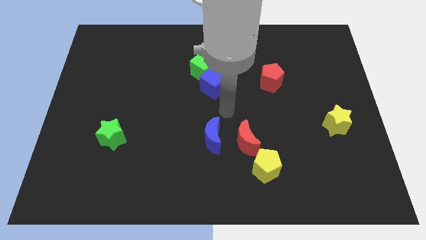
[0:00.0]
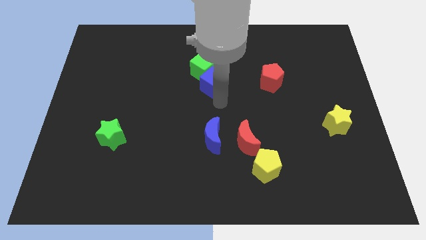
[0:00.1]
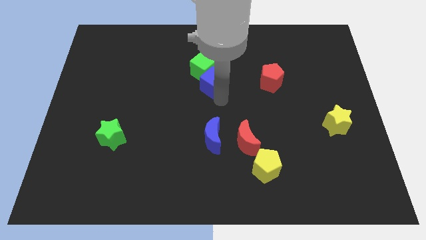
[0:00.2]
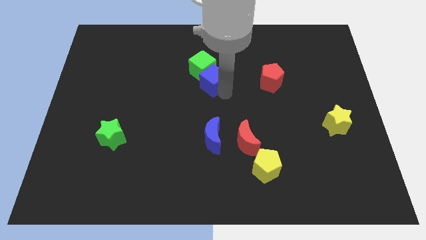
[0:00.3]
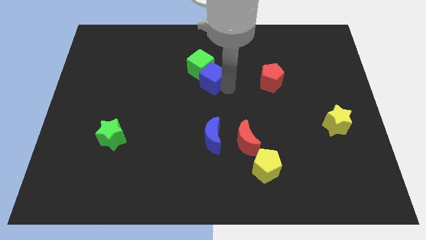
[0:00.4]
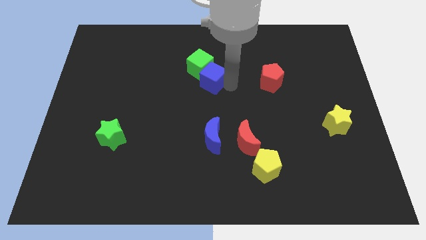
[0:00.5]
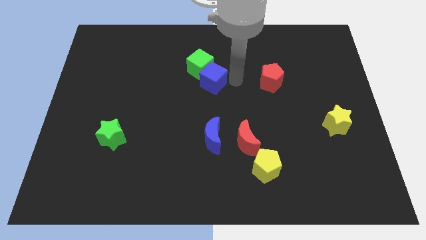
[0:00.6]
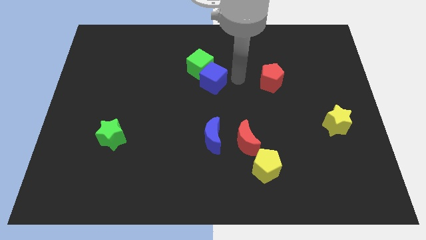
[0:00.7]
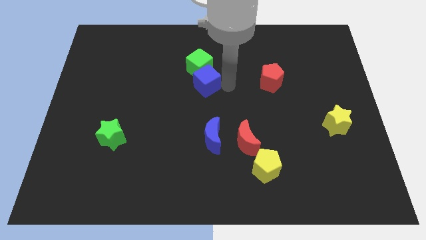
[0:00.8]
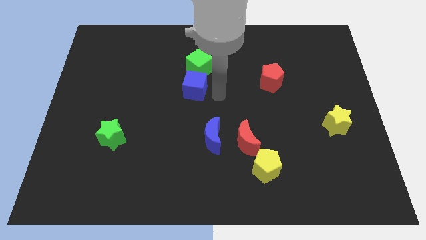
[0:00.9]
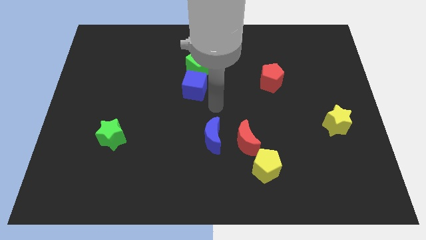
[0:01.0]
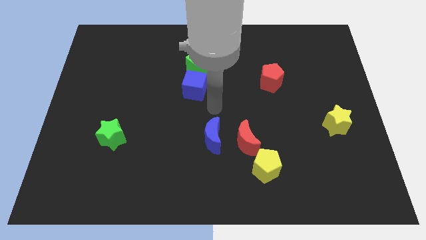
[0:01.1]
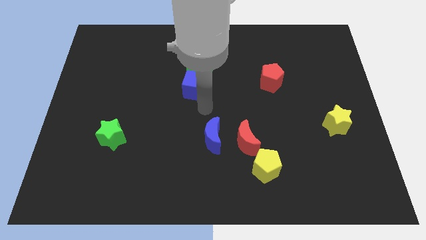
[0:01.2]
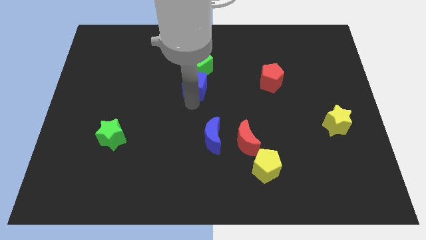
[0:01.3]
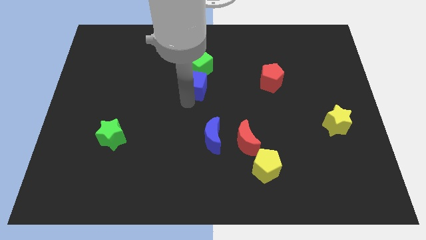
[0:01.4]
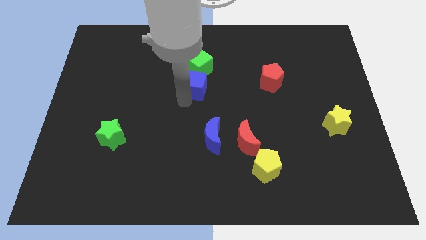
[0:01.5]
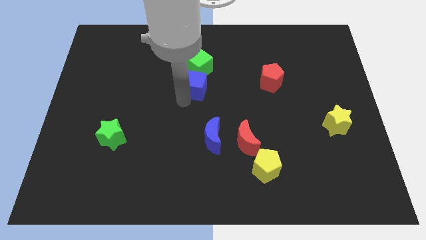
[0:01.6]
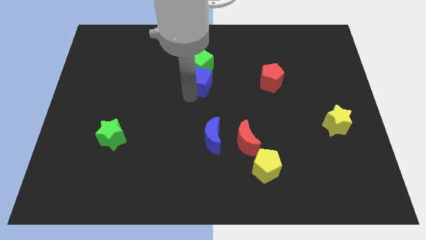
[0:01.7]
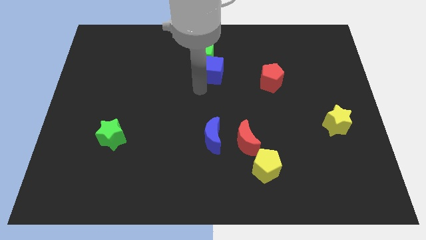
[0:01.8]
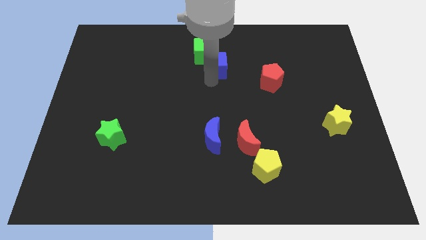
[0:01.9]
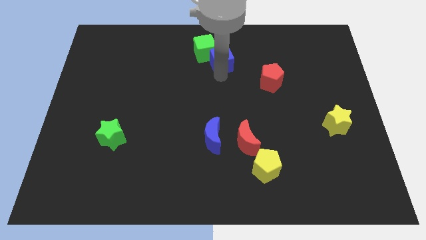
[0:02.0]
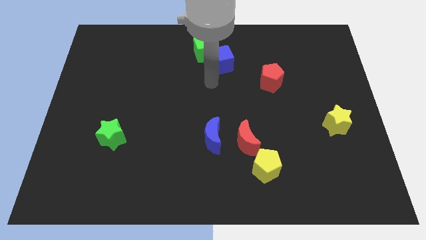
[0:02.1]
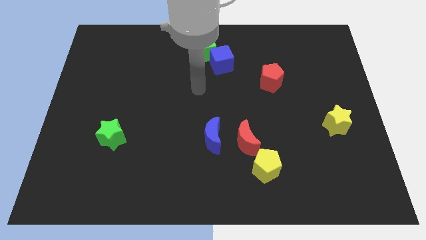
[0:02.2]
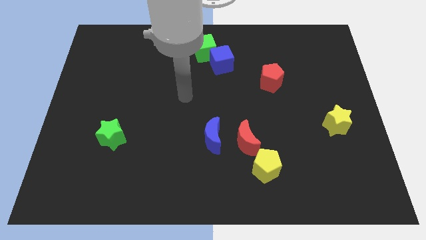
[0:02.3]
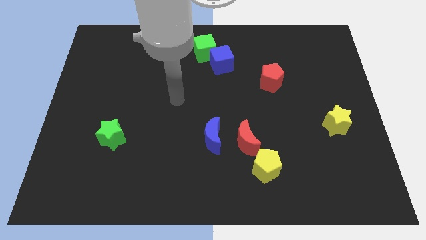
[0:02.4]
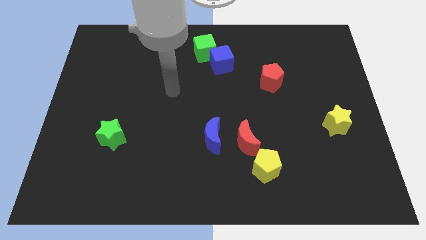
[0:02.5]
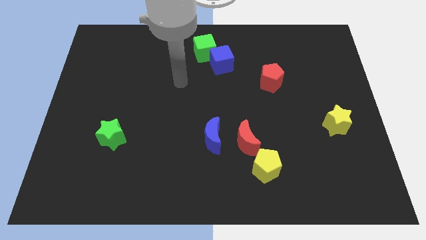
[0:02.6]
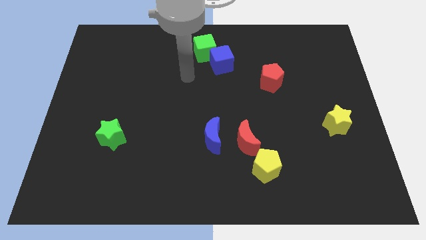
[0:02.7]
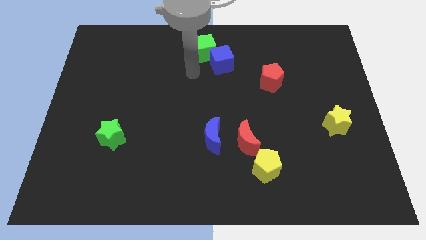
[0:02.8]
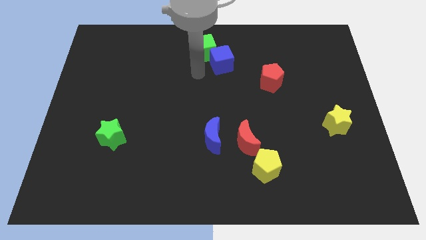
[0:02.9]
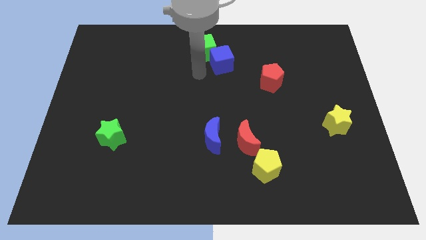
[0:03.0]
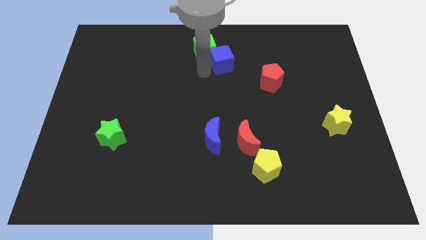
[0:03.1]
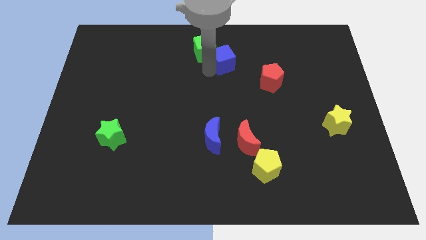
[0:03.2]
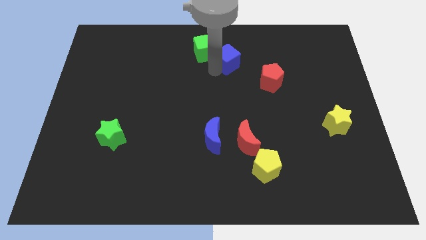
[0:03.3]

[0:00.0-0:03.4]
push the blue and green cube upwards

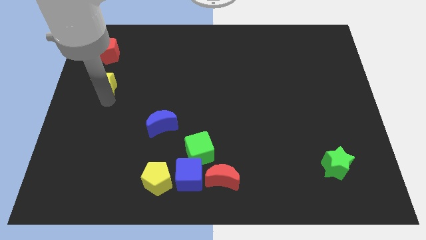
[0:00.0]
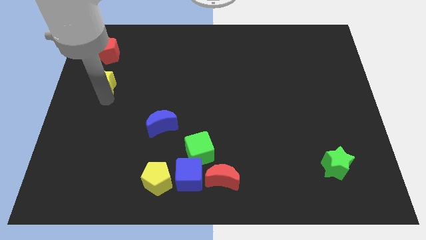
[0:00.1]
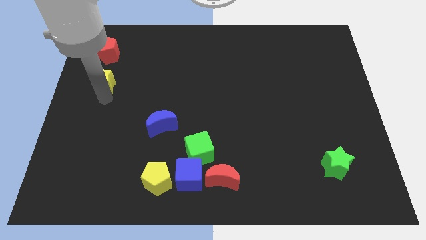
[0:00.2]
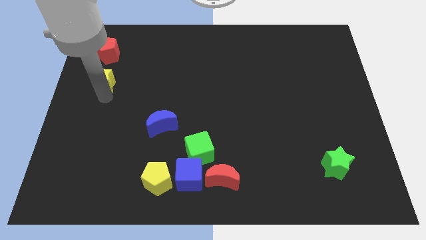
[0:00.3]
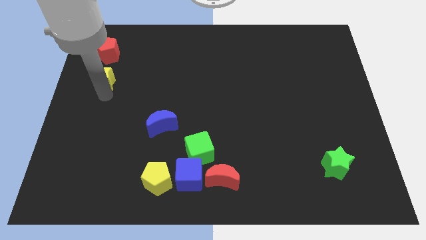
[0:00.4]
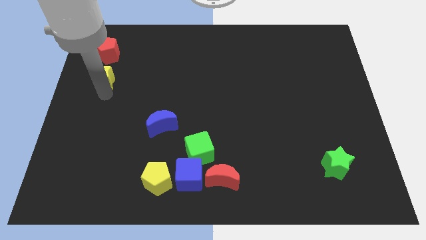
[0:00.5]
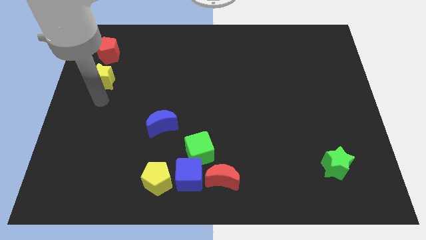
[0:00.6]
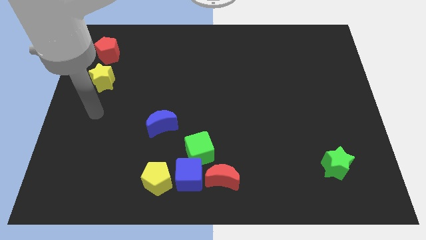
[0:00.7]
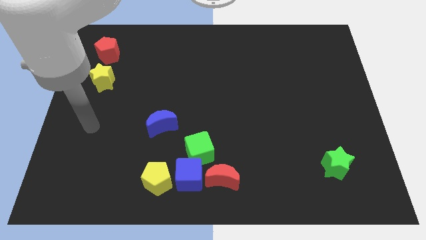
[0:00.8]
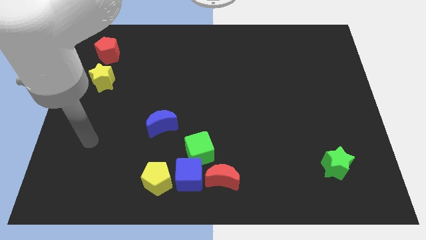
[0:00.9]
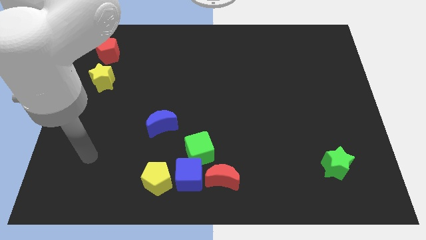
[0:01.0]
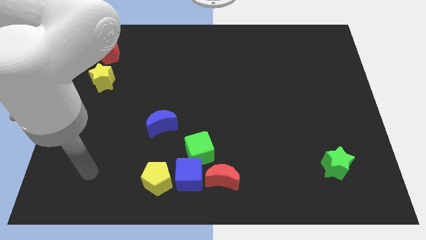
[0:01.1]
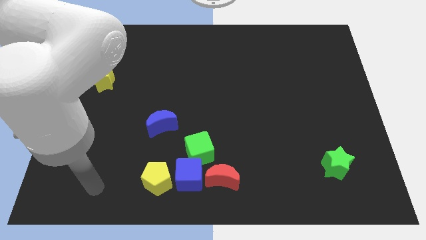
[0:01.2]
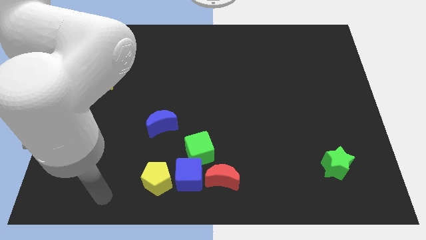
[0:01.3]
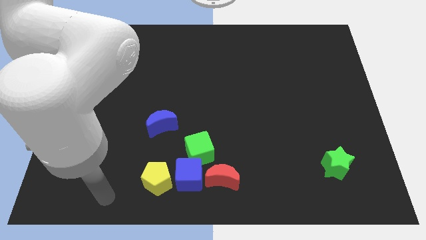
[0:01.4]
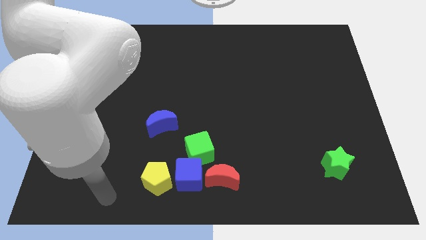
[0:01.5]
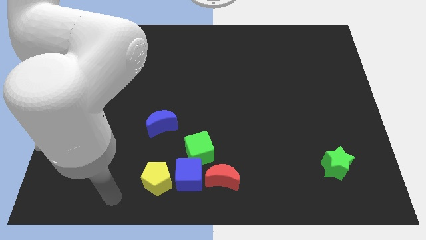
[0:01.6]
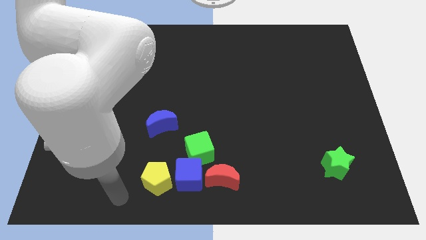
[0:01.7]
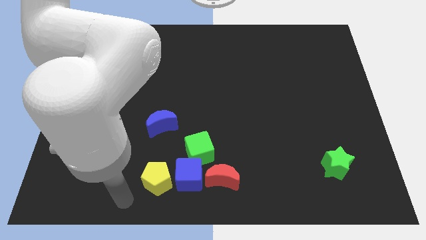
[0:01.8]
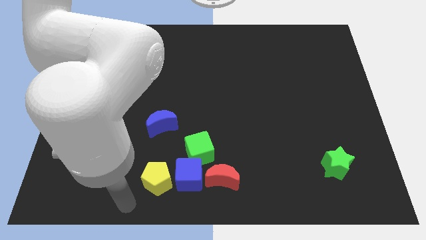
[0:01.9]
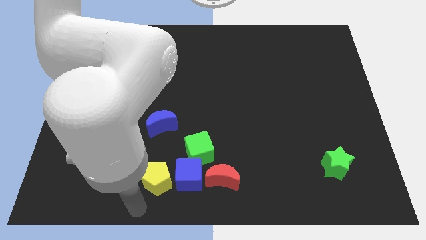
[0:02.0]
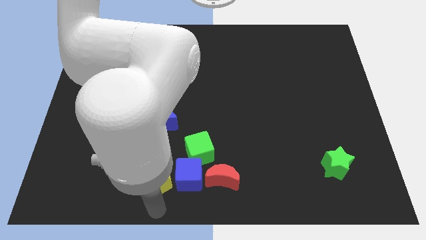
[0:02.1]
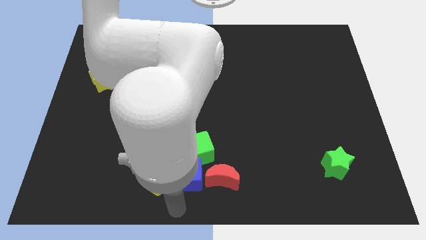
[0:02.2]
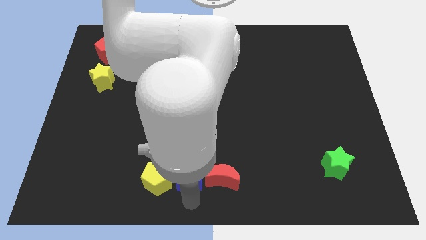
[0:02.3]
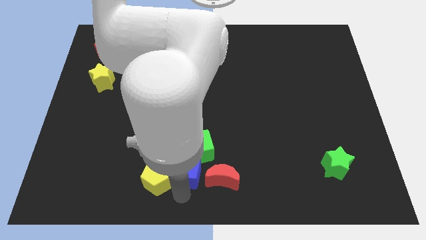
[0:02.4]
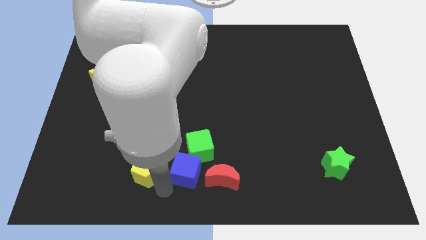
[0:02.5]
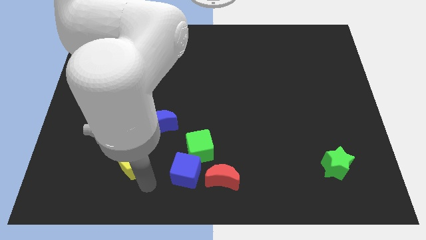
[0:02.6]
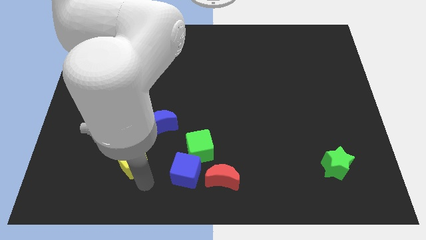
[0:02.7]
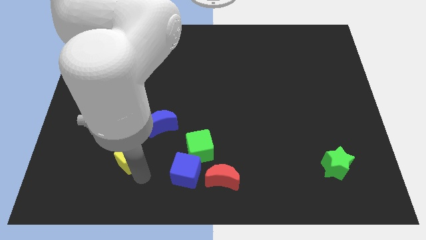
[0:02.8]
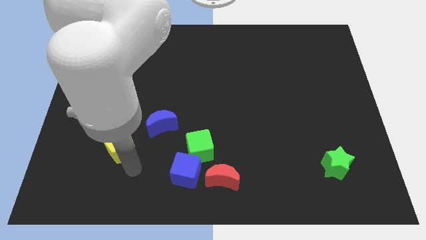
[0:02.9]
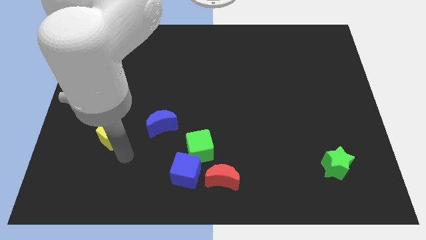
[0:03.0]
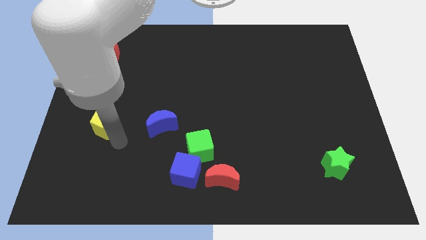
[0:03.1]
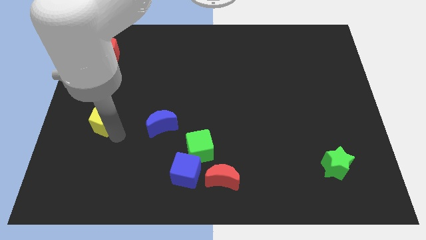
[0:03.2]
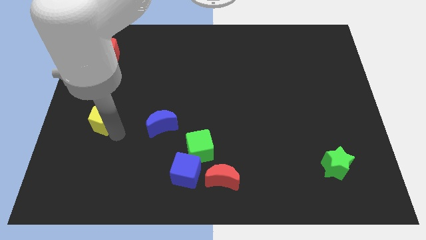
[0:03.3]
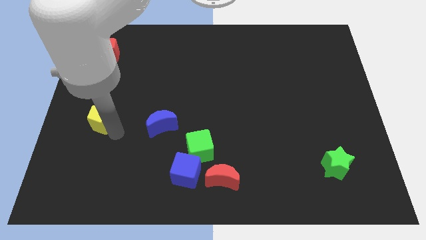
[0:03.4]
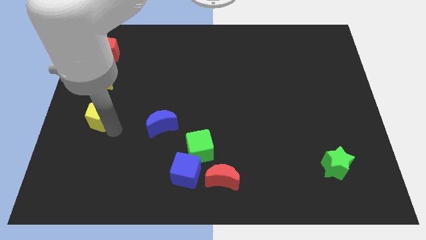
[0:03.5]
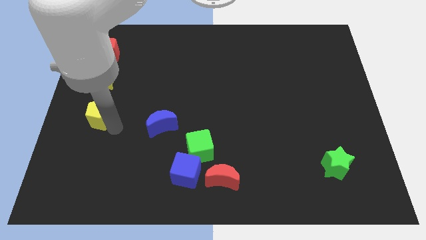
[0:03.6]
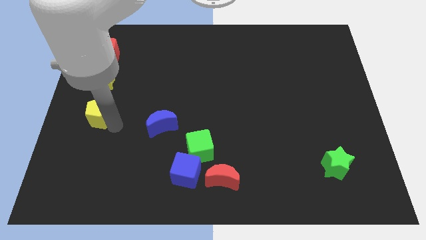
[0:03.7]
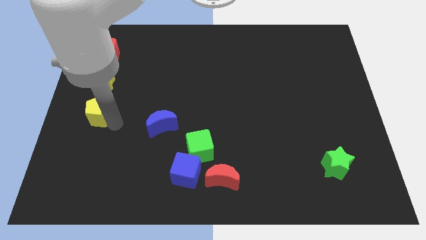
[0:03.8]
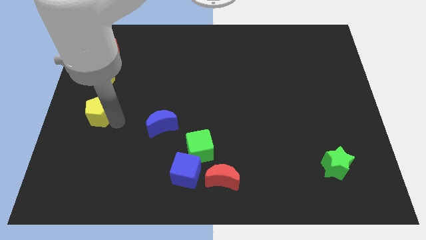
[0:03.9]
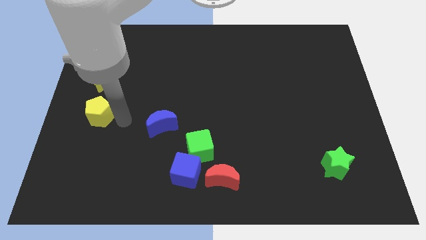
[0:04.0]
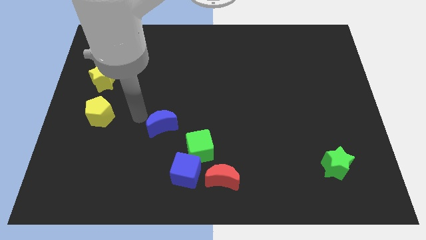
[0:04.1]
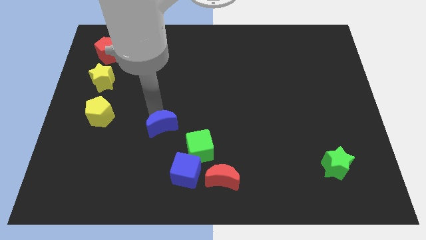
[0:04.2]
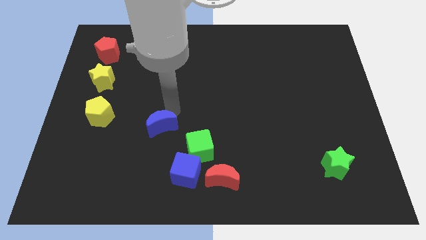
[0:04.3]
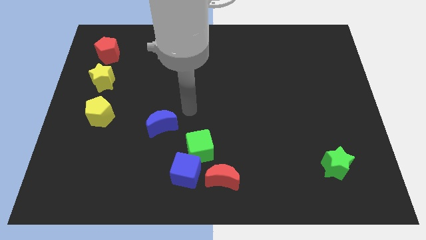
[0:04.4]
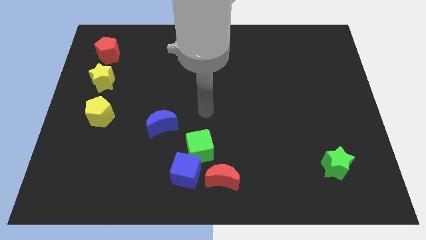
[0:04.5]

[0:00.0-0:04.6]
move yellow pentagon to the left center

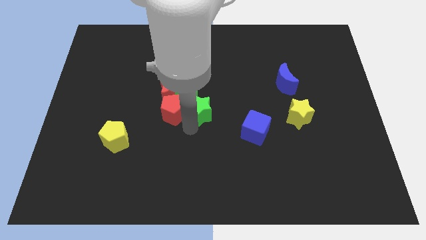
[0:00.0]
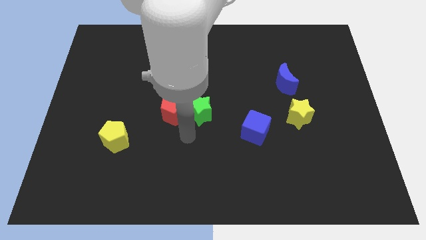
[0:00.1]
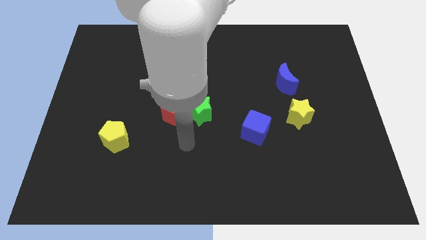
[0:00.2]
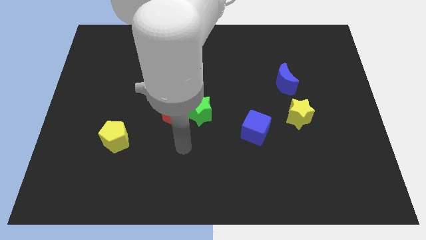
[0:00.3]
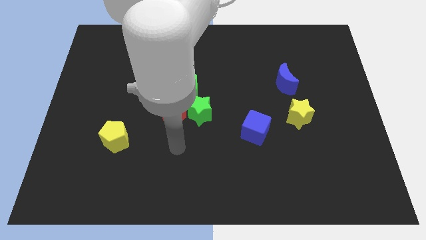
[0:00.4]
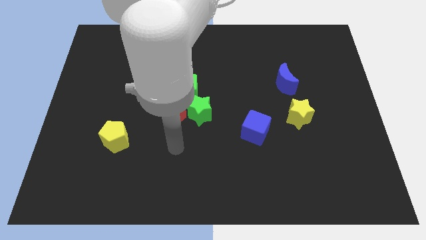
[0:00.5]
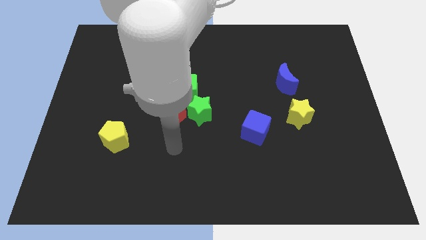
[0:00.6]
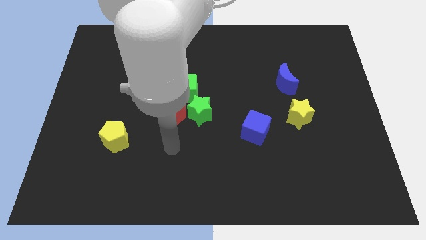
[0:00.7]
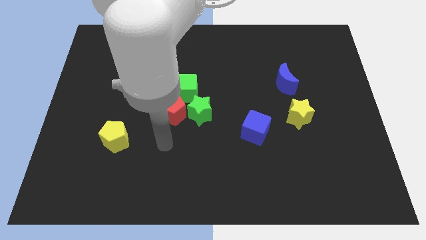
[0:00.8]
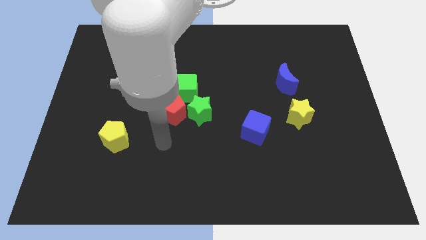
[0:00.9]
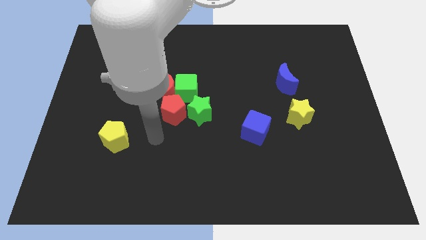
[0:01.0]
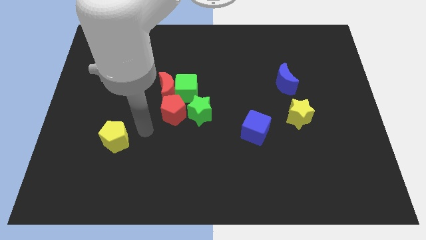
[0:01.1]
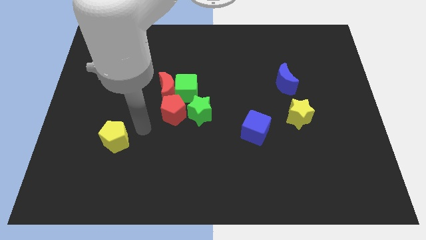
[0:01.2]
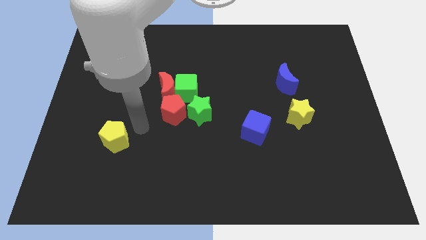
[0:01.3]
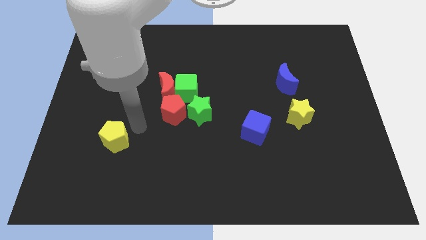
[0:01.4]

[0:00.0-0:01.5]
put your arm in between the pentagons
